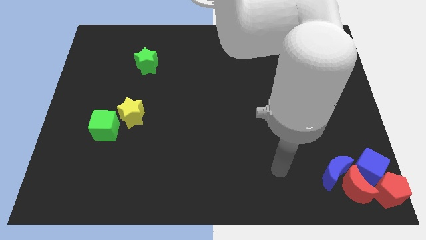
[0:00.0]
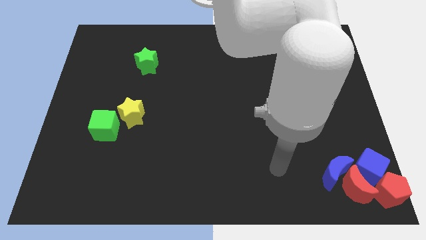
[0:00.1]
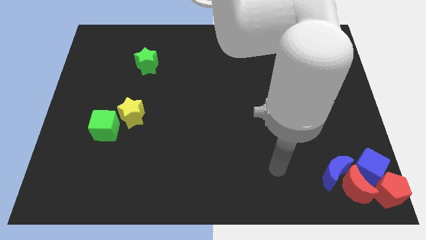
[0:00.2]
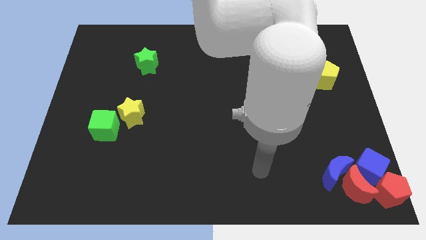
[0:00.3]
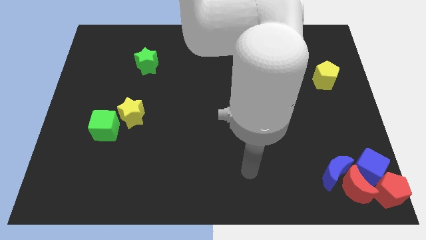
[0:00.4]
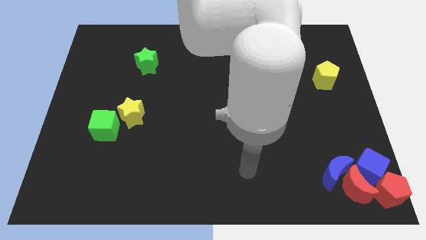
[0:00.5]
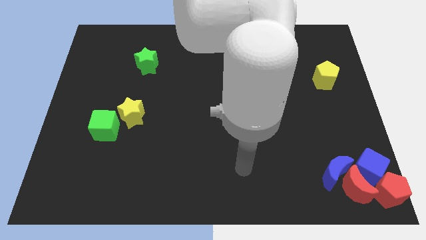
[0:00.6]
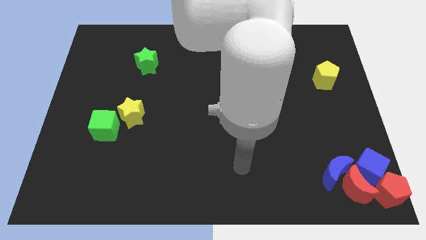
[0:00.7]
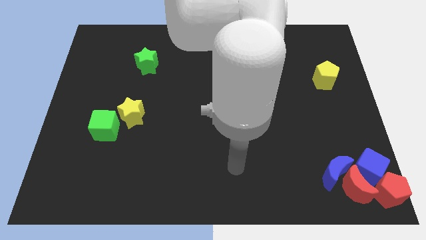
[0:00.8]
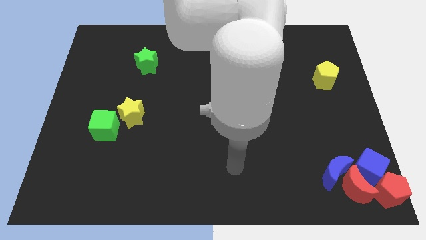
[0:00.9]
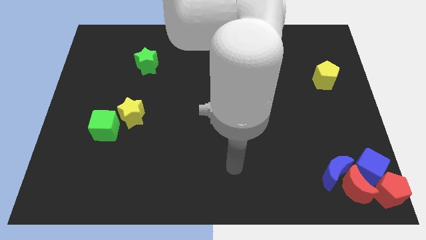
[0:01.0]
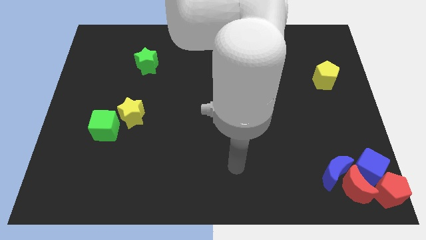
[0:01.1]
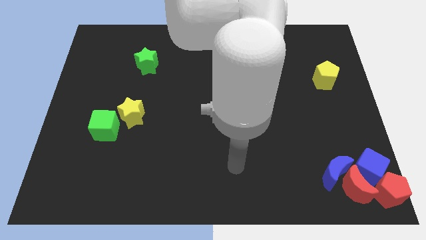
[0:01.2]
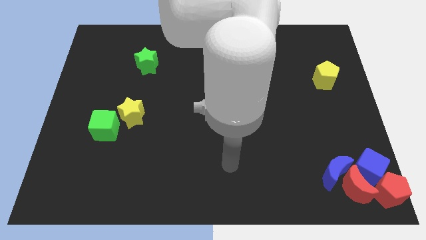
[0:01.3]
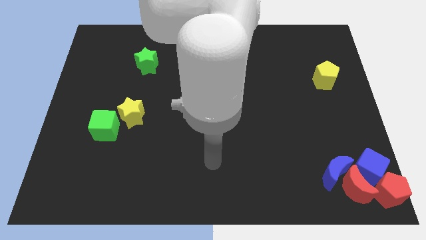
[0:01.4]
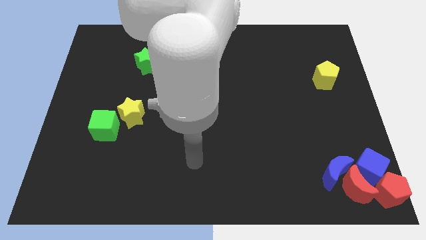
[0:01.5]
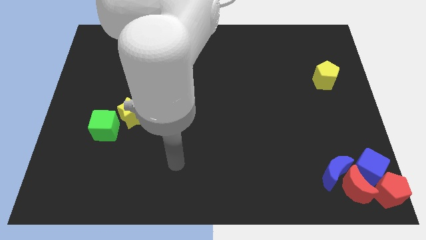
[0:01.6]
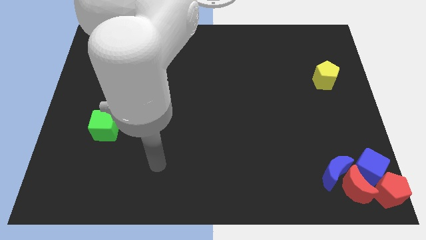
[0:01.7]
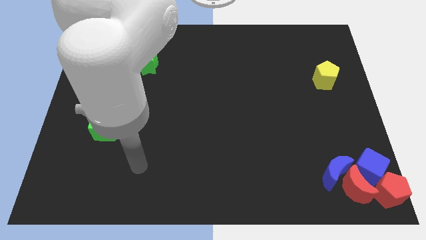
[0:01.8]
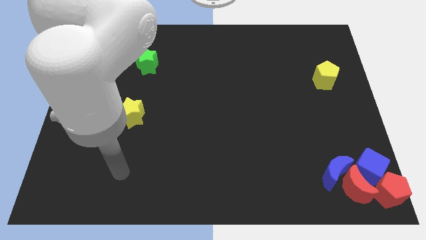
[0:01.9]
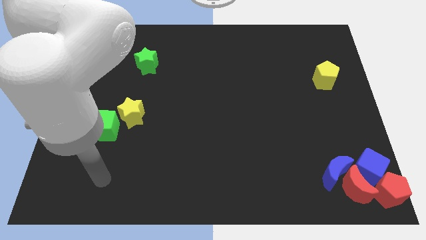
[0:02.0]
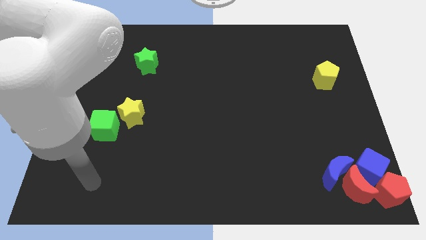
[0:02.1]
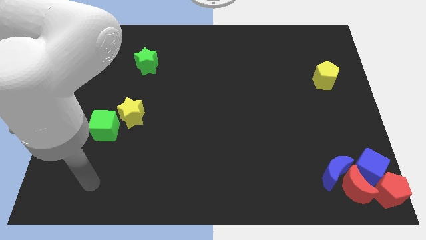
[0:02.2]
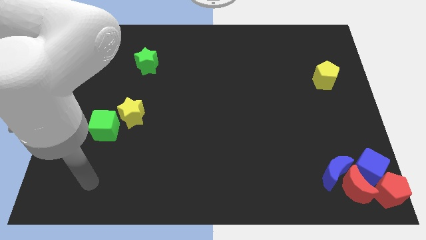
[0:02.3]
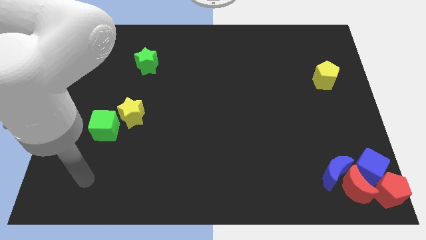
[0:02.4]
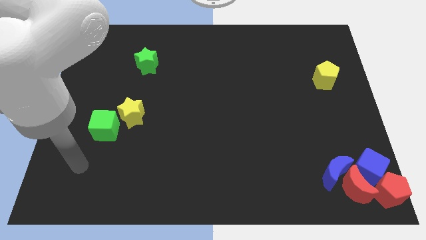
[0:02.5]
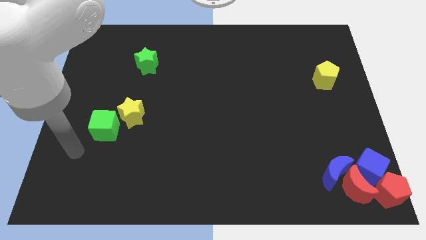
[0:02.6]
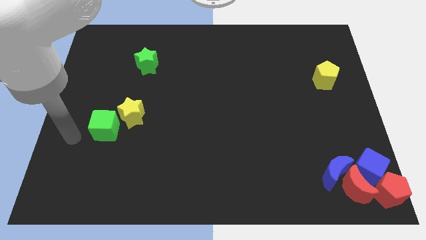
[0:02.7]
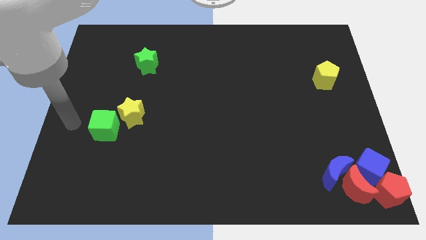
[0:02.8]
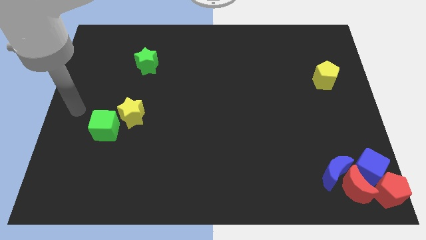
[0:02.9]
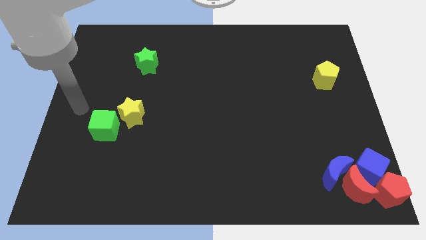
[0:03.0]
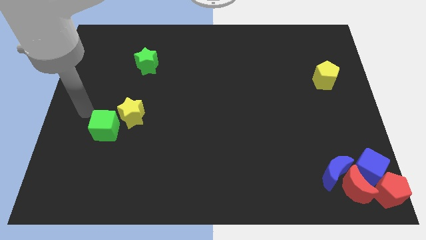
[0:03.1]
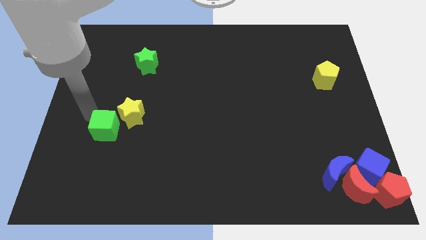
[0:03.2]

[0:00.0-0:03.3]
go and touch the top left of the green cube

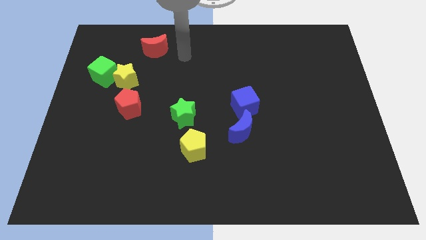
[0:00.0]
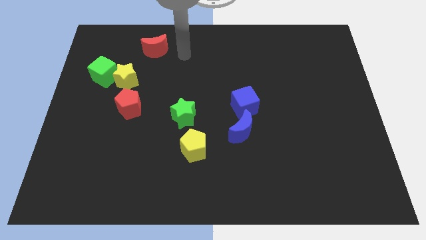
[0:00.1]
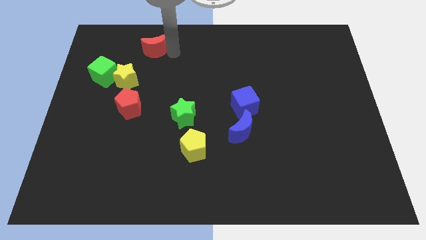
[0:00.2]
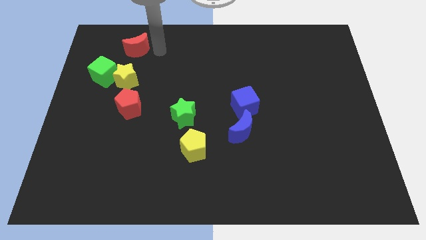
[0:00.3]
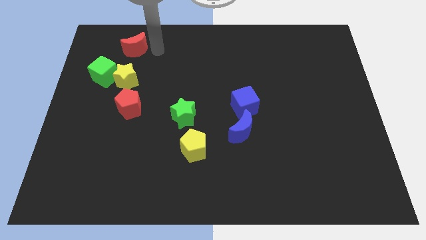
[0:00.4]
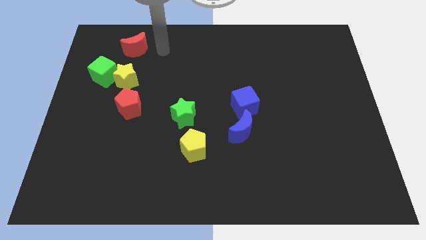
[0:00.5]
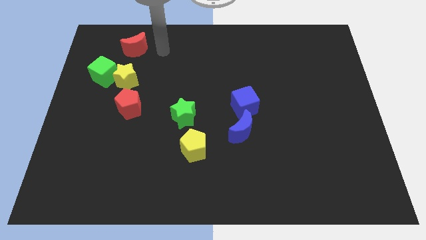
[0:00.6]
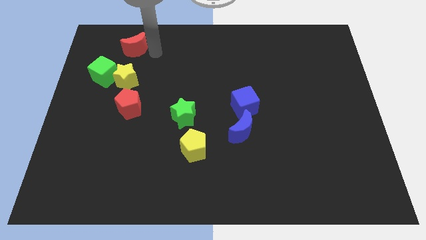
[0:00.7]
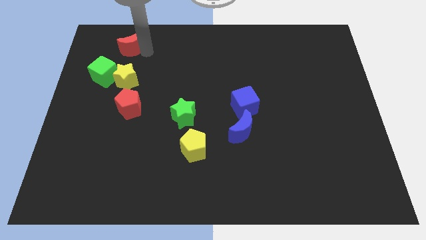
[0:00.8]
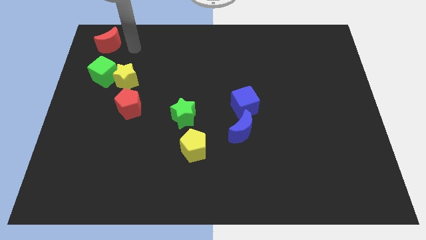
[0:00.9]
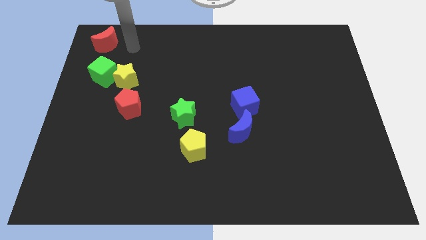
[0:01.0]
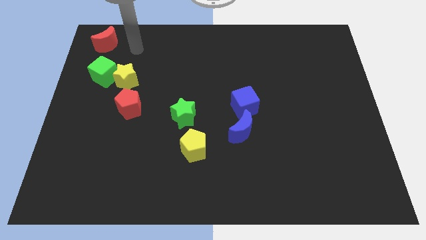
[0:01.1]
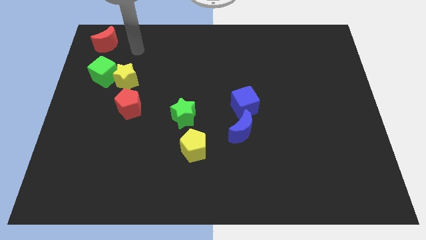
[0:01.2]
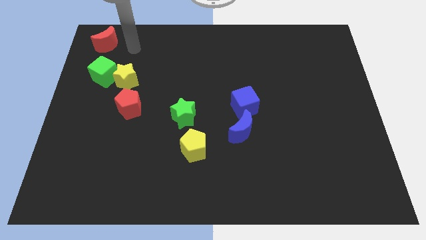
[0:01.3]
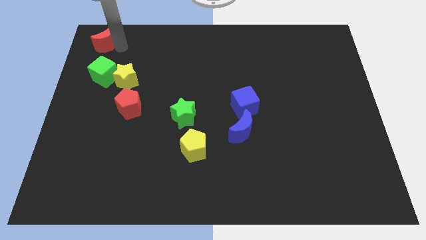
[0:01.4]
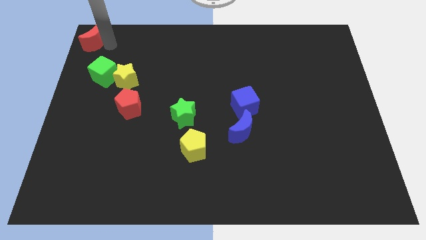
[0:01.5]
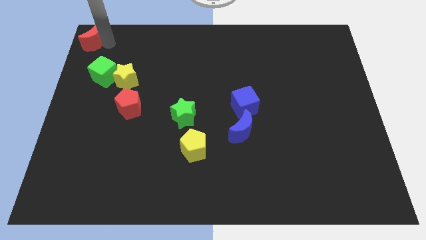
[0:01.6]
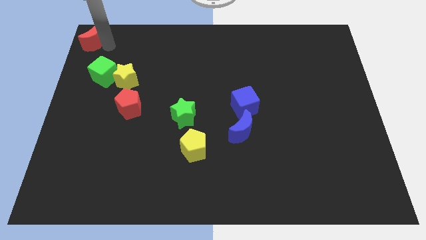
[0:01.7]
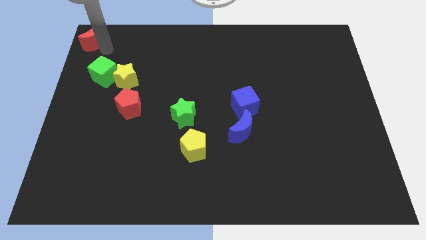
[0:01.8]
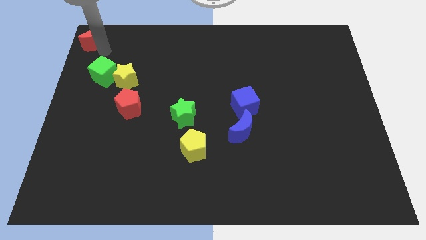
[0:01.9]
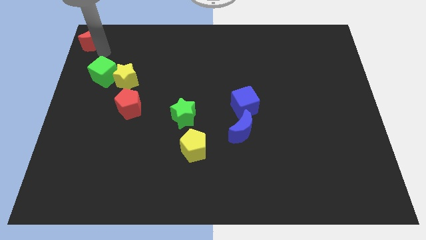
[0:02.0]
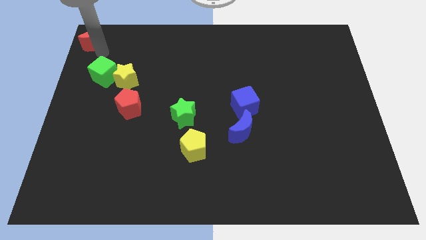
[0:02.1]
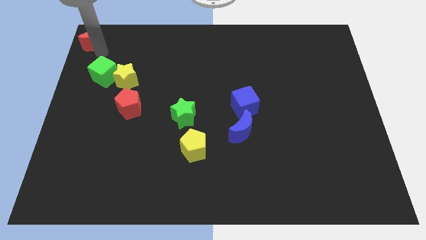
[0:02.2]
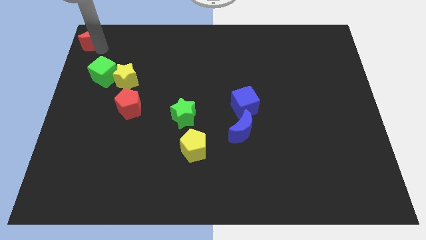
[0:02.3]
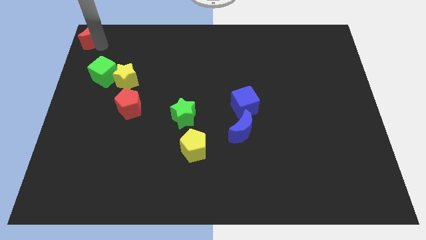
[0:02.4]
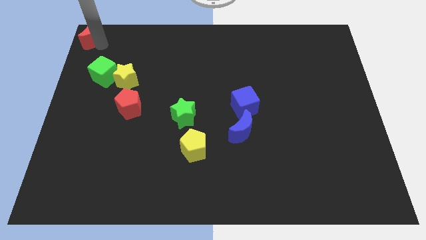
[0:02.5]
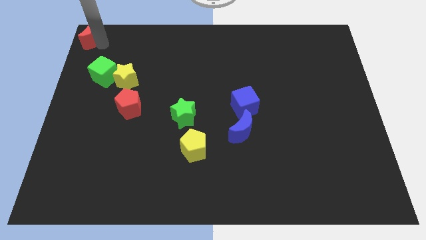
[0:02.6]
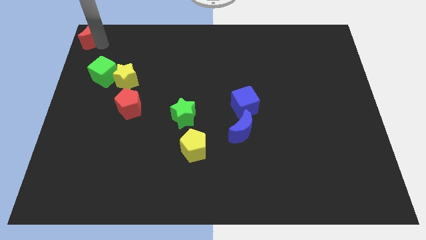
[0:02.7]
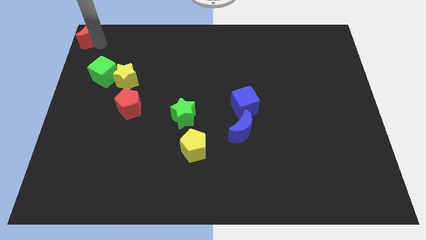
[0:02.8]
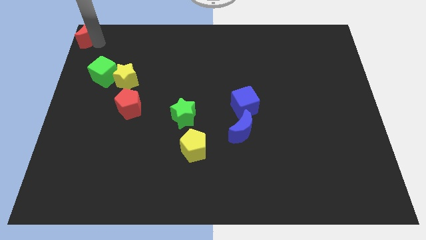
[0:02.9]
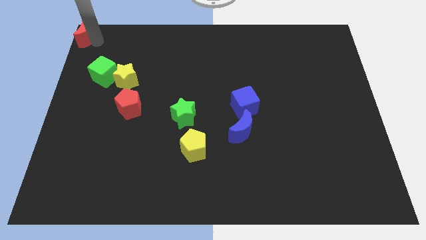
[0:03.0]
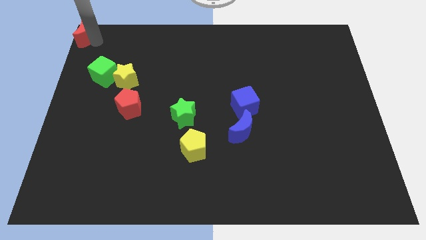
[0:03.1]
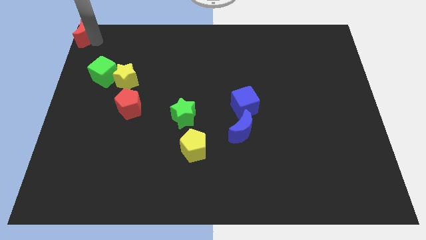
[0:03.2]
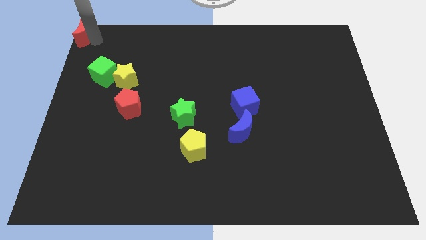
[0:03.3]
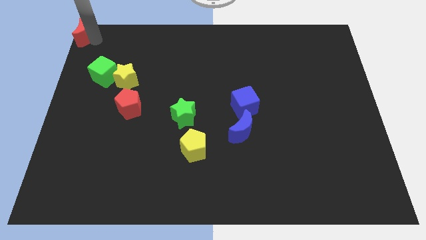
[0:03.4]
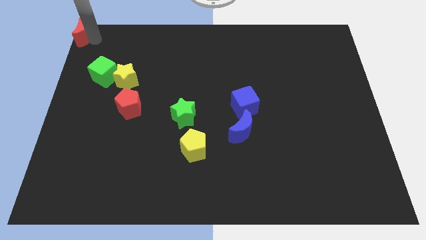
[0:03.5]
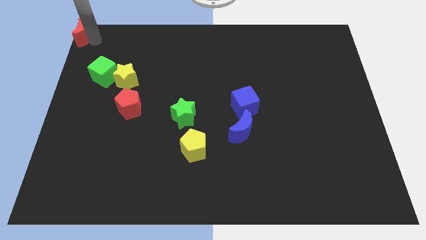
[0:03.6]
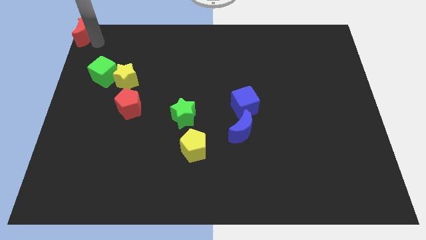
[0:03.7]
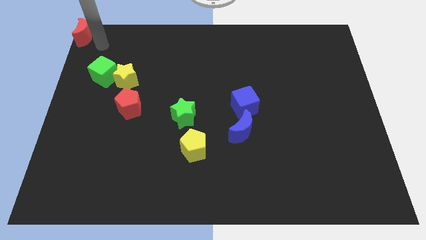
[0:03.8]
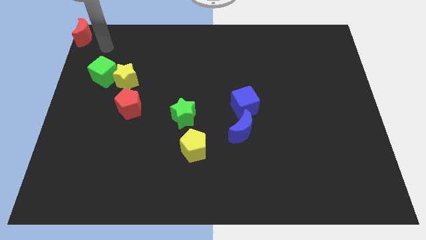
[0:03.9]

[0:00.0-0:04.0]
move the red moon to the top left corner of the board

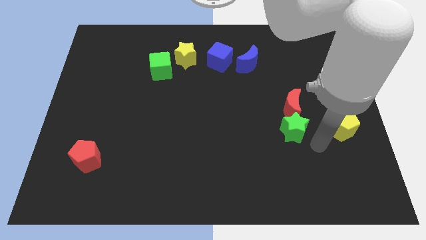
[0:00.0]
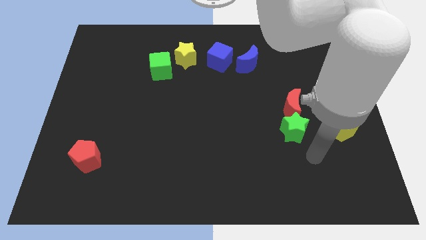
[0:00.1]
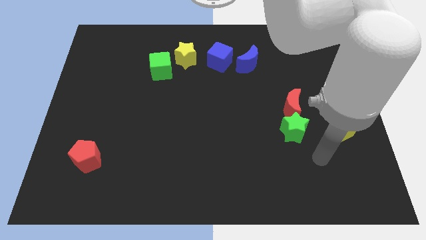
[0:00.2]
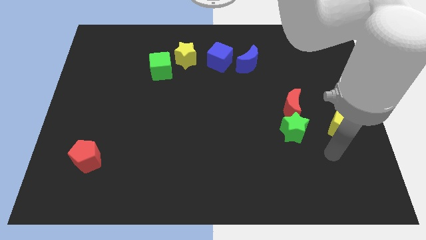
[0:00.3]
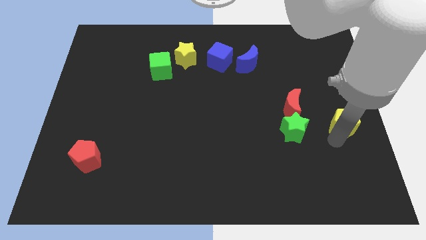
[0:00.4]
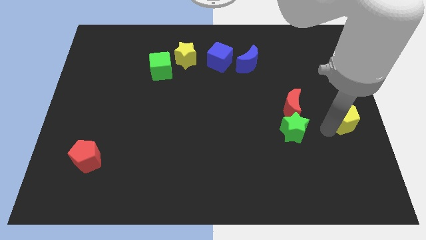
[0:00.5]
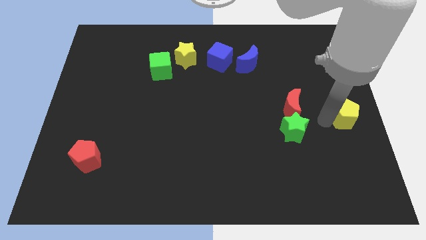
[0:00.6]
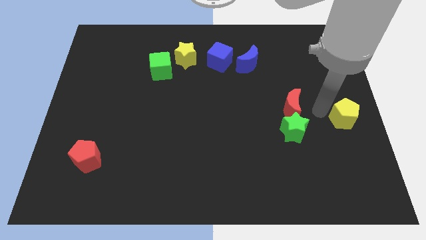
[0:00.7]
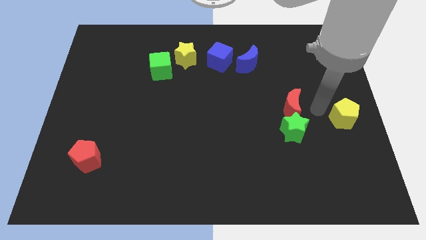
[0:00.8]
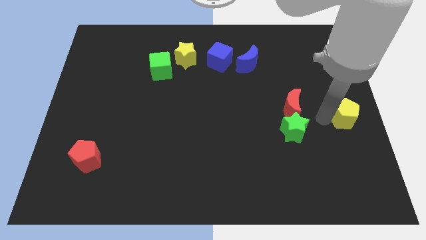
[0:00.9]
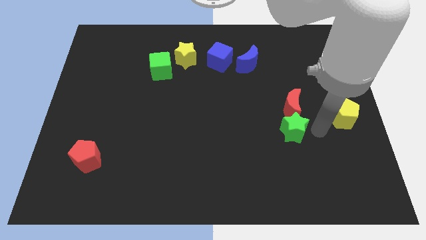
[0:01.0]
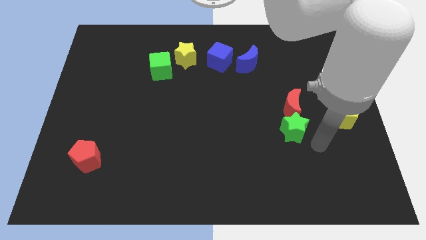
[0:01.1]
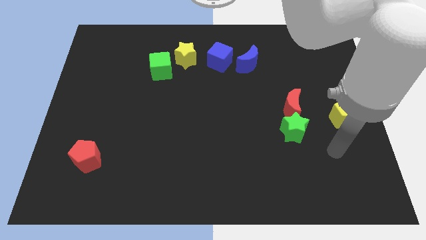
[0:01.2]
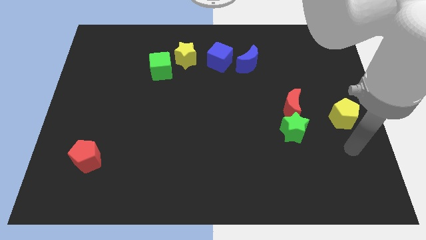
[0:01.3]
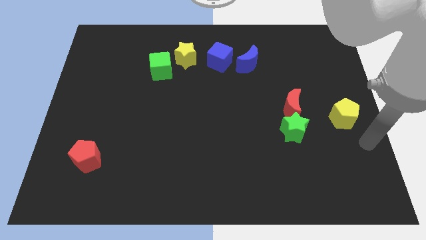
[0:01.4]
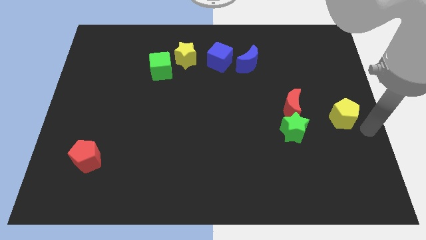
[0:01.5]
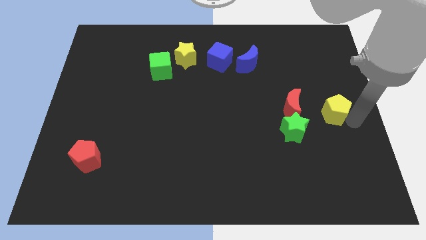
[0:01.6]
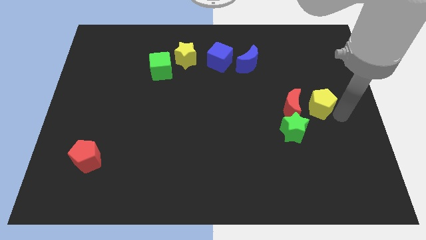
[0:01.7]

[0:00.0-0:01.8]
push the yellow pentagon to the right side of the red moon
